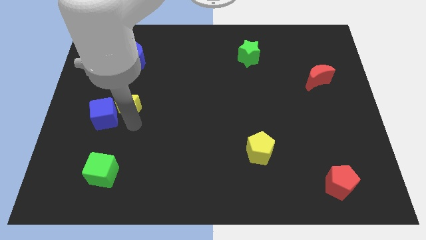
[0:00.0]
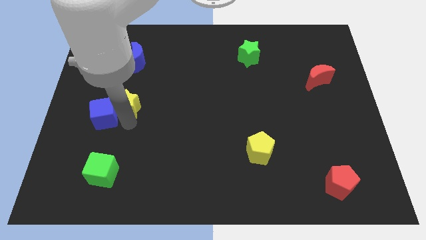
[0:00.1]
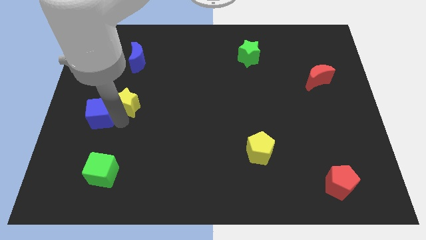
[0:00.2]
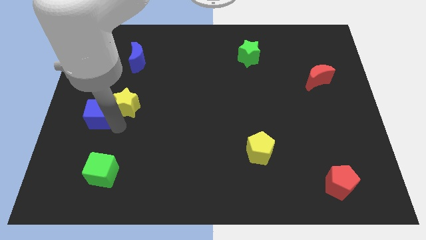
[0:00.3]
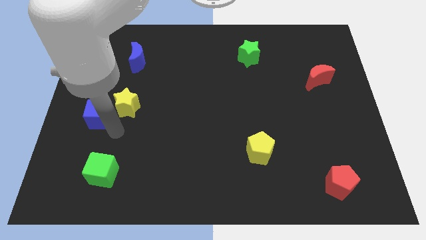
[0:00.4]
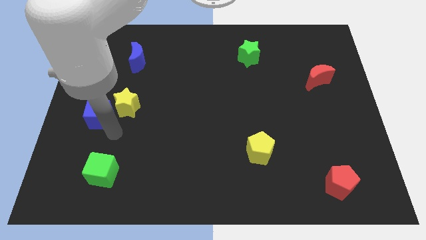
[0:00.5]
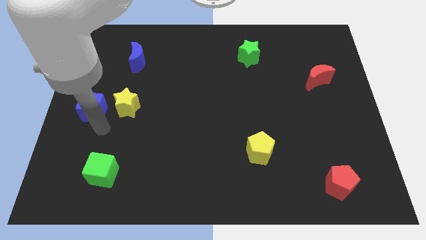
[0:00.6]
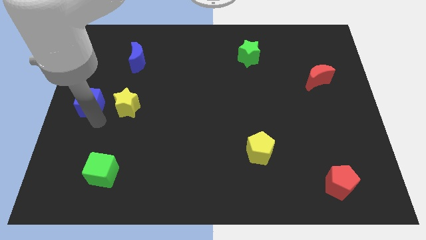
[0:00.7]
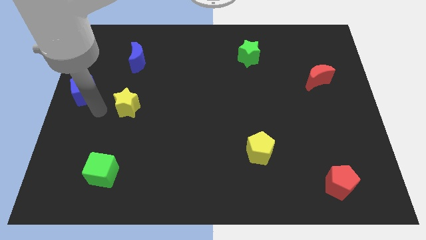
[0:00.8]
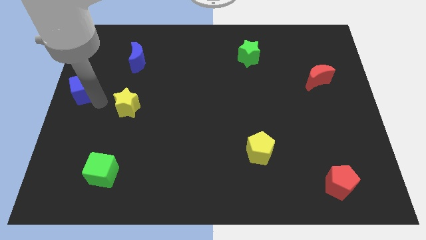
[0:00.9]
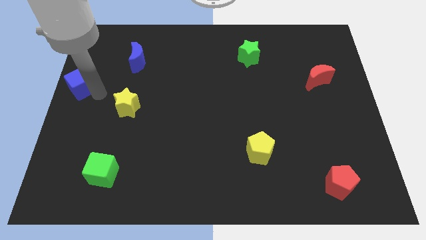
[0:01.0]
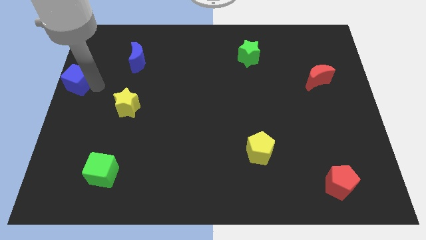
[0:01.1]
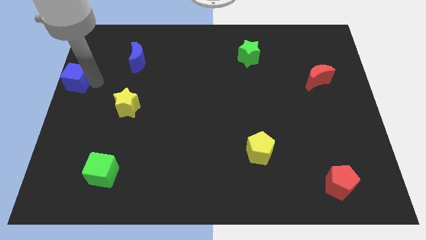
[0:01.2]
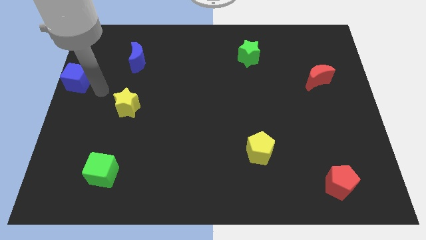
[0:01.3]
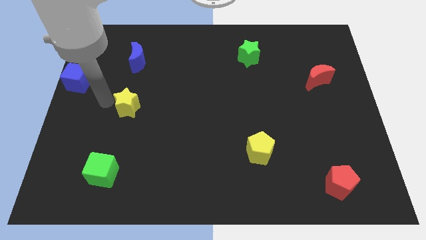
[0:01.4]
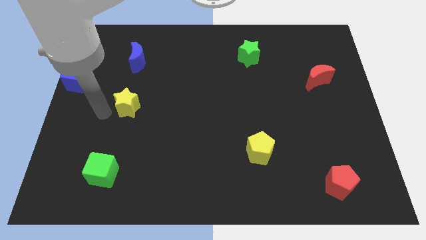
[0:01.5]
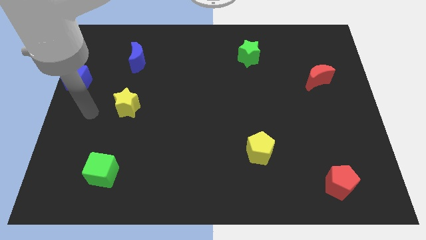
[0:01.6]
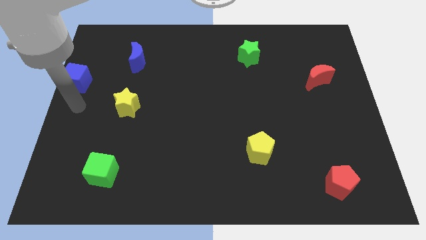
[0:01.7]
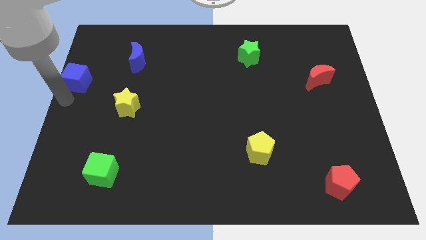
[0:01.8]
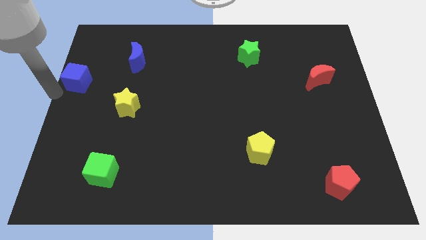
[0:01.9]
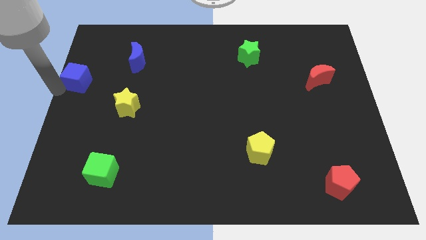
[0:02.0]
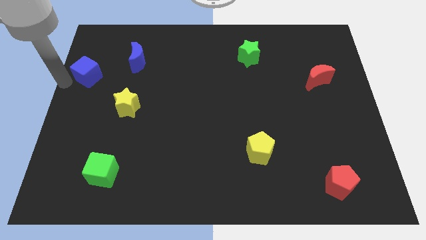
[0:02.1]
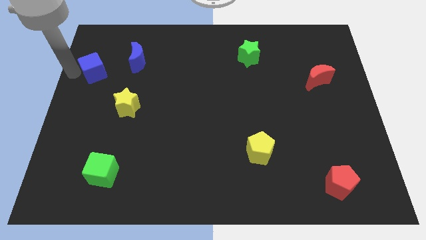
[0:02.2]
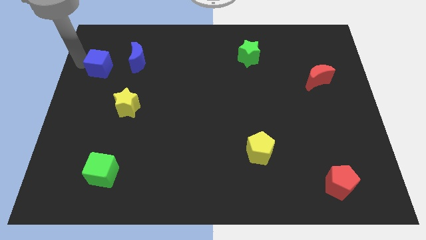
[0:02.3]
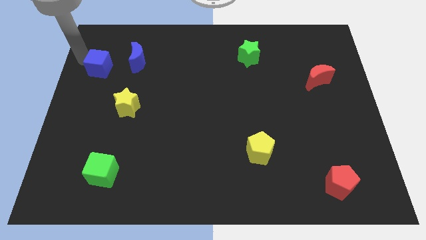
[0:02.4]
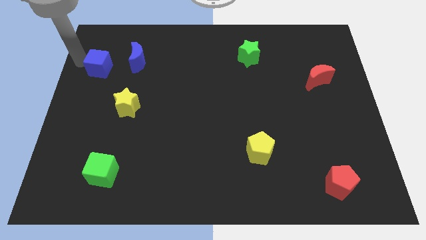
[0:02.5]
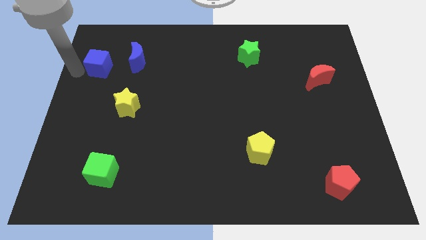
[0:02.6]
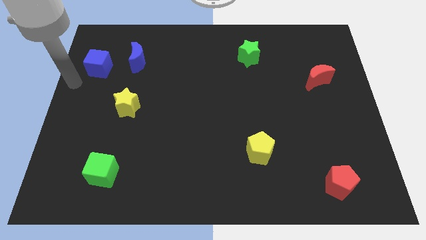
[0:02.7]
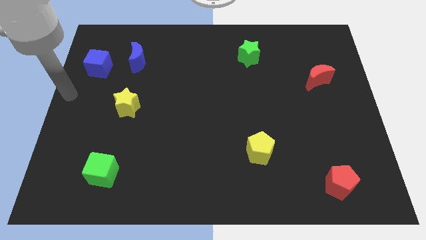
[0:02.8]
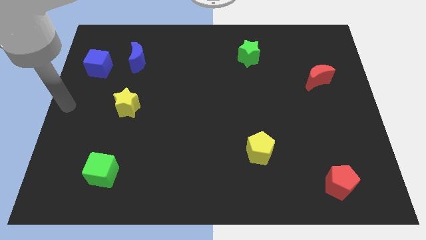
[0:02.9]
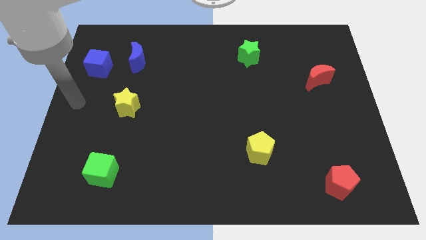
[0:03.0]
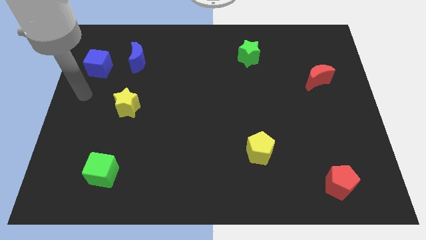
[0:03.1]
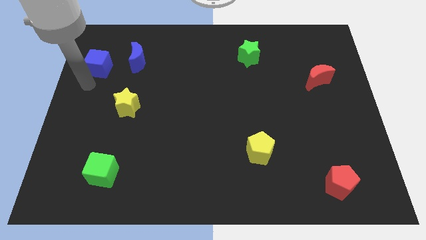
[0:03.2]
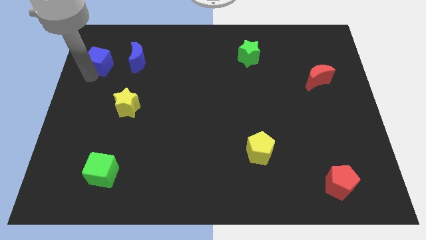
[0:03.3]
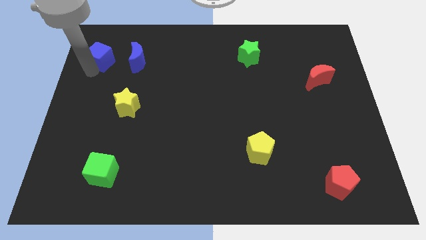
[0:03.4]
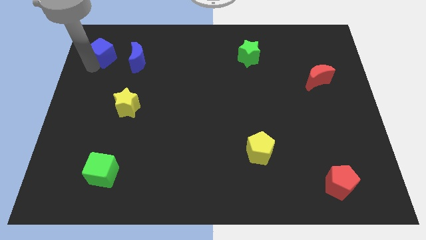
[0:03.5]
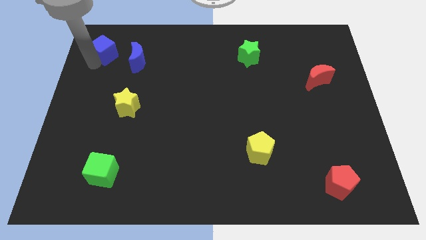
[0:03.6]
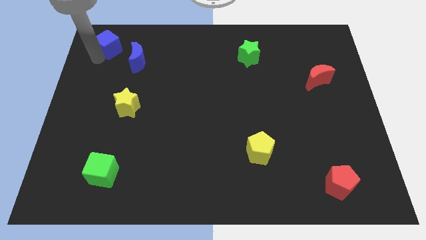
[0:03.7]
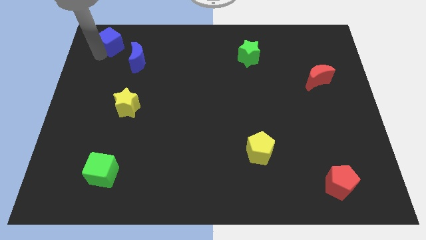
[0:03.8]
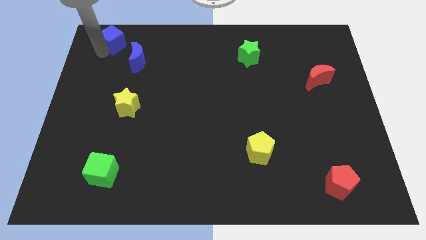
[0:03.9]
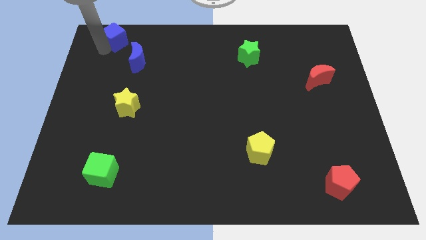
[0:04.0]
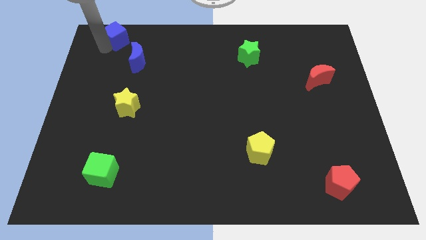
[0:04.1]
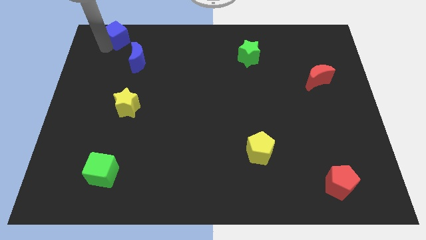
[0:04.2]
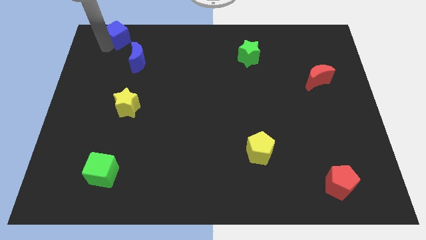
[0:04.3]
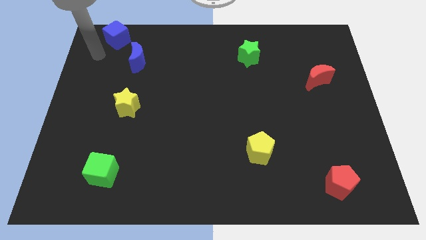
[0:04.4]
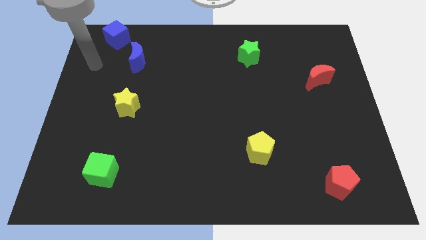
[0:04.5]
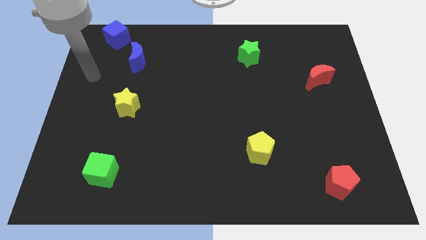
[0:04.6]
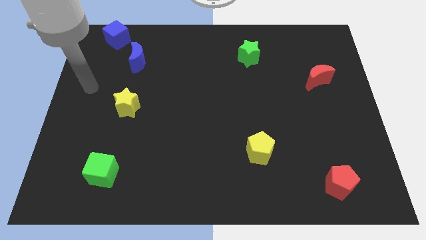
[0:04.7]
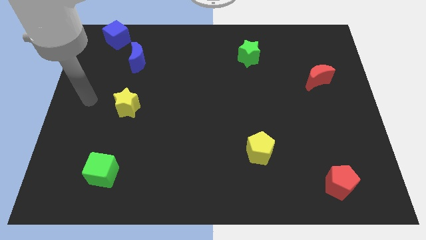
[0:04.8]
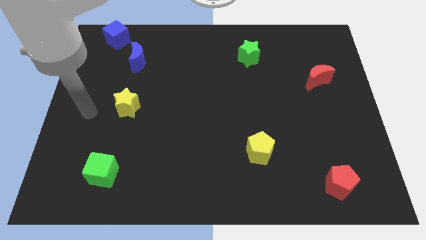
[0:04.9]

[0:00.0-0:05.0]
move blue cube to the top left

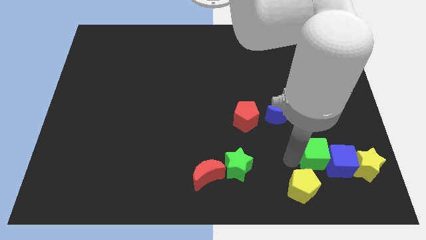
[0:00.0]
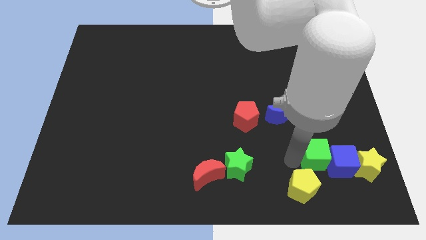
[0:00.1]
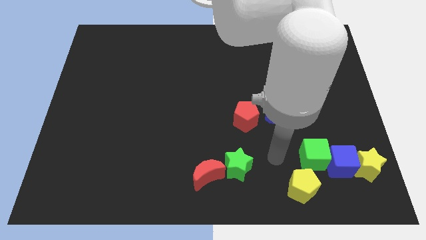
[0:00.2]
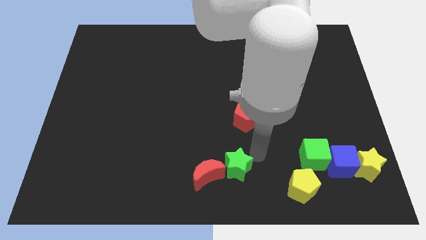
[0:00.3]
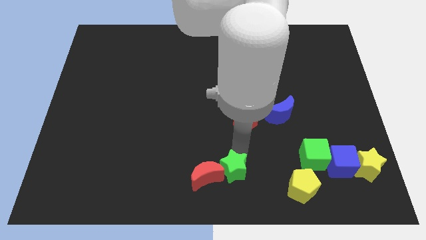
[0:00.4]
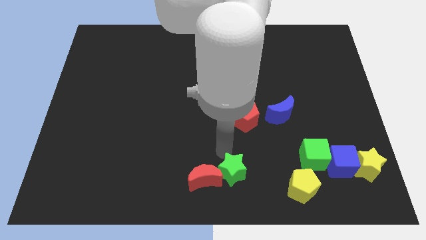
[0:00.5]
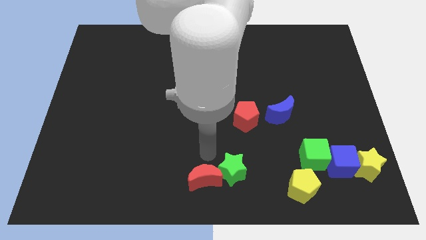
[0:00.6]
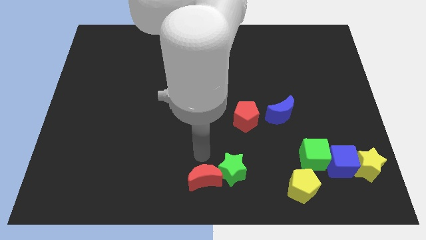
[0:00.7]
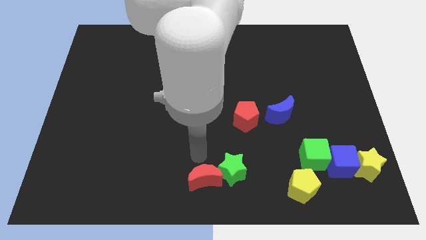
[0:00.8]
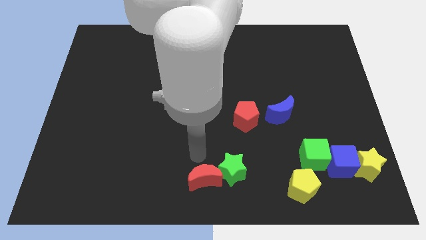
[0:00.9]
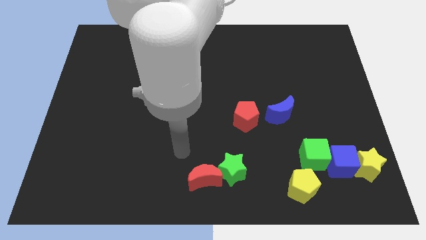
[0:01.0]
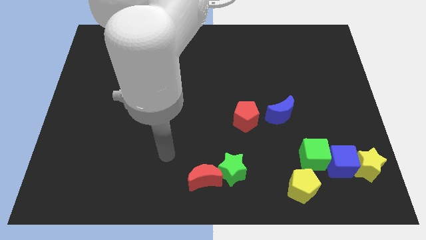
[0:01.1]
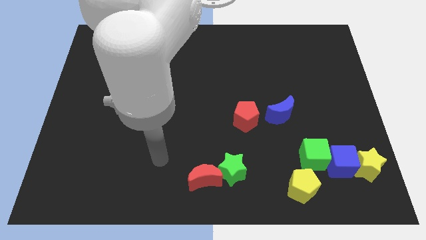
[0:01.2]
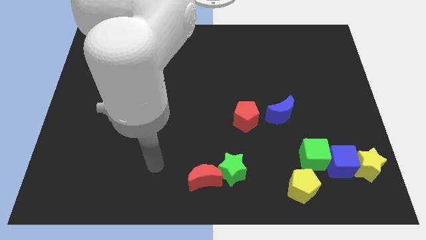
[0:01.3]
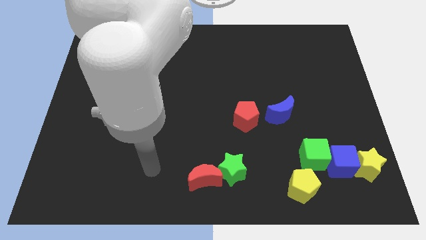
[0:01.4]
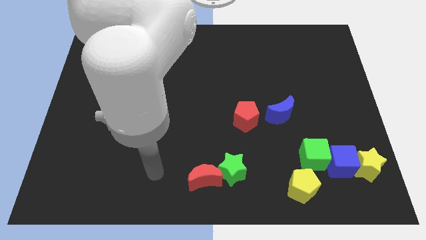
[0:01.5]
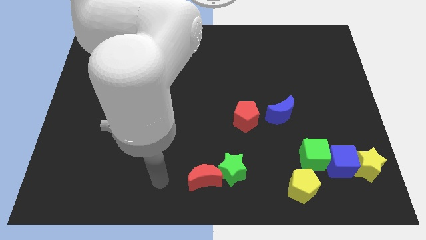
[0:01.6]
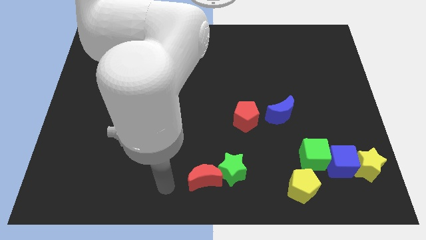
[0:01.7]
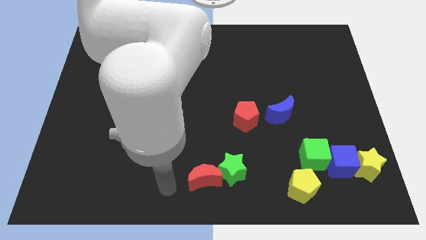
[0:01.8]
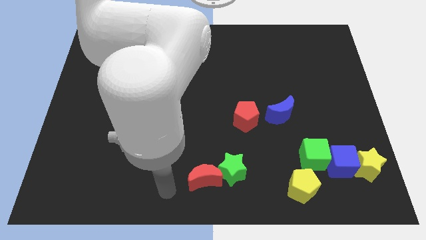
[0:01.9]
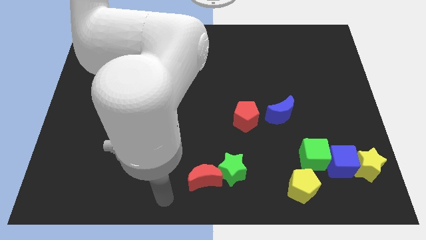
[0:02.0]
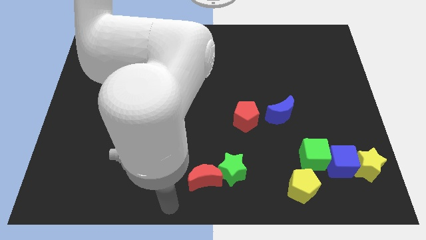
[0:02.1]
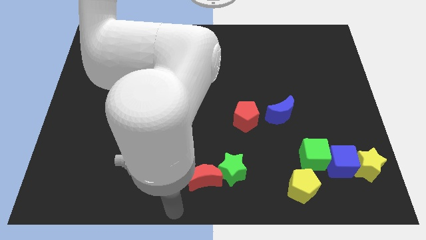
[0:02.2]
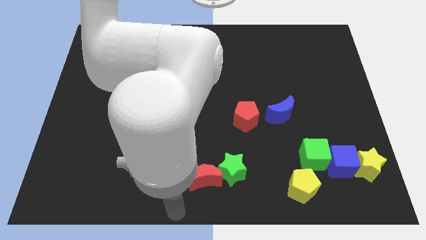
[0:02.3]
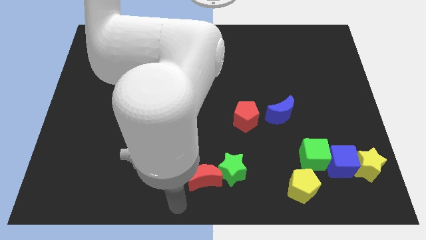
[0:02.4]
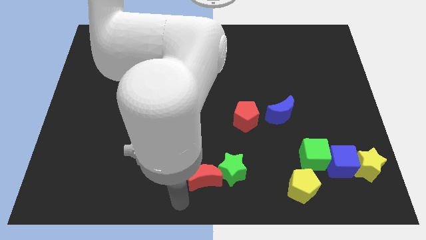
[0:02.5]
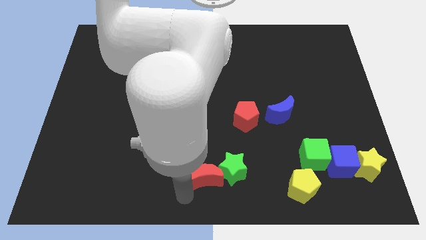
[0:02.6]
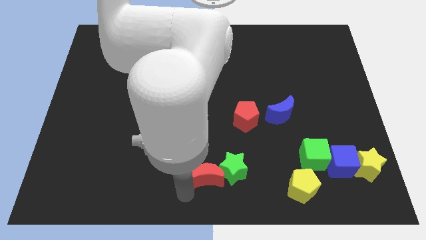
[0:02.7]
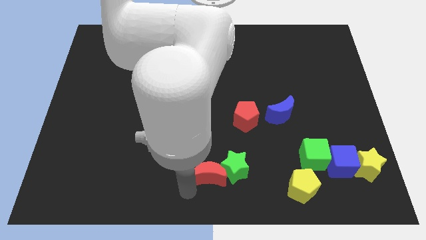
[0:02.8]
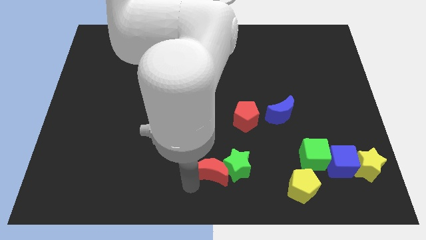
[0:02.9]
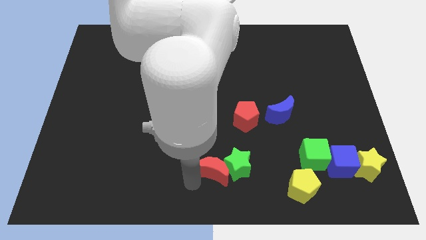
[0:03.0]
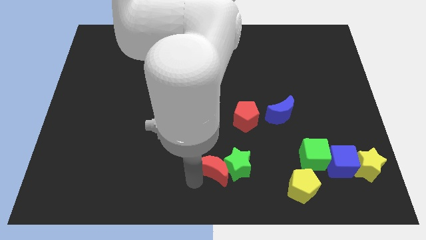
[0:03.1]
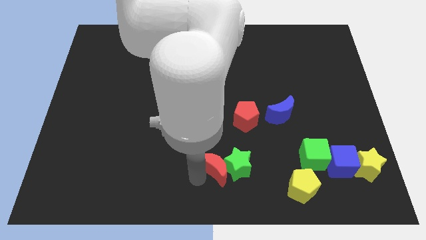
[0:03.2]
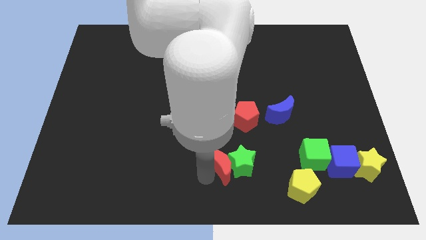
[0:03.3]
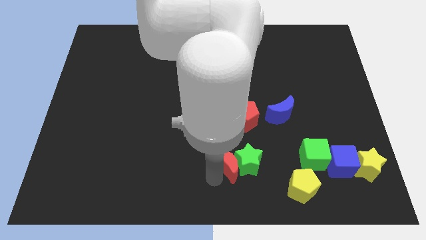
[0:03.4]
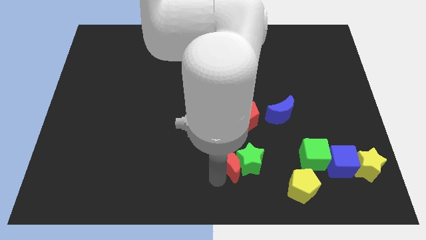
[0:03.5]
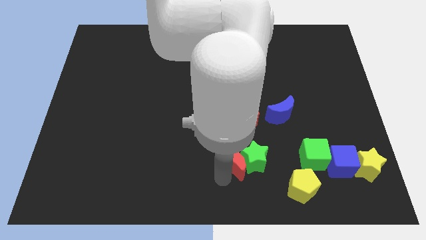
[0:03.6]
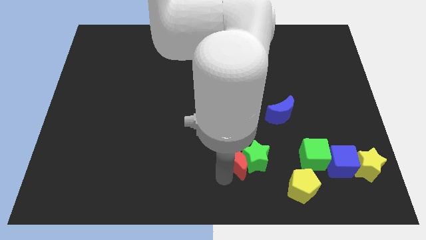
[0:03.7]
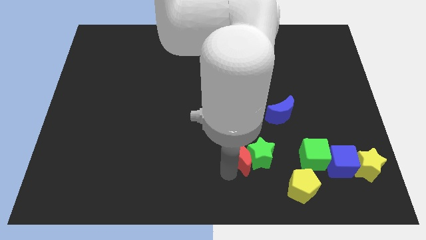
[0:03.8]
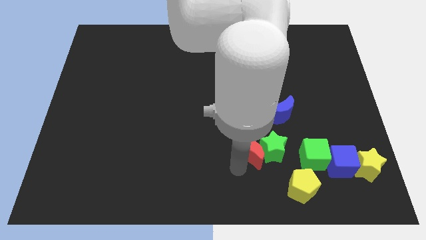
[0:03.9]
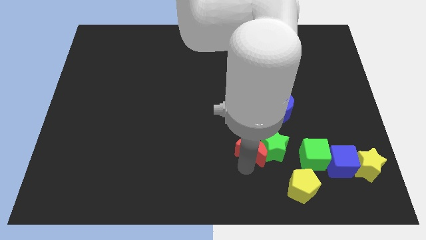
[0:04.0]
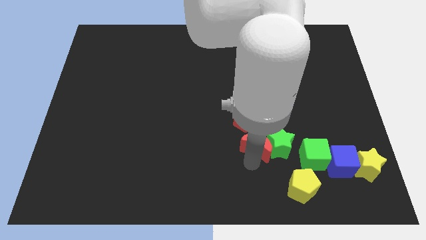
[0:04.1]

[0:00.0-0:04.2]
push the red crescent to the left of the green cube along with the green star
